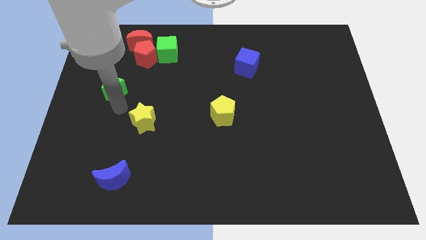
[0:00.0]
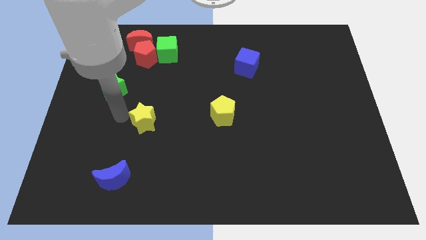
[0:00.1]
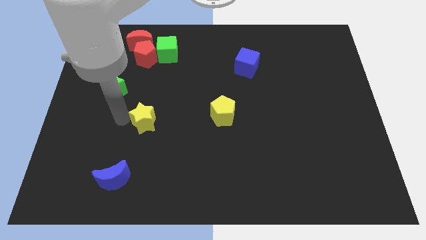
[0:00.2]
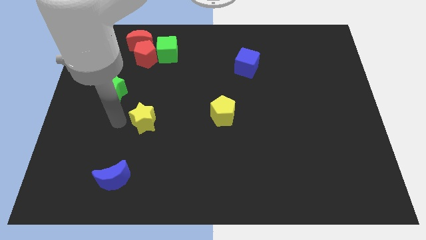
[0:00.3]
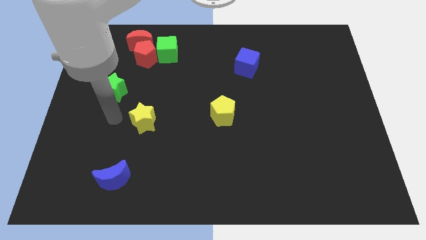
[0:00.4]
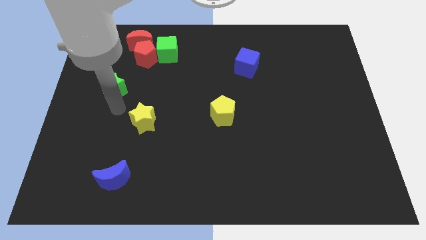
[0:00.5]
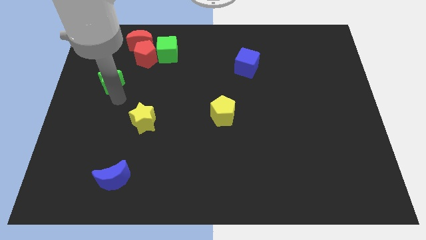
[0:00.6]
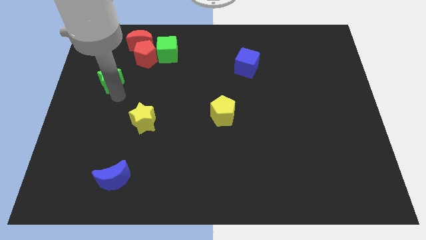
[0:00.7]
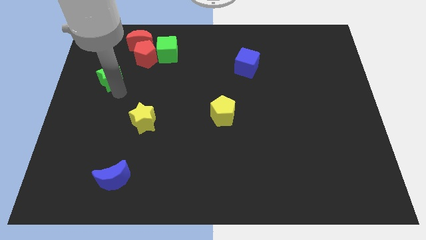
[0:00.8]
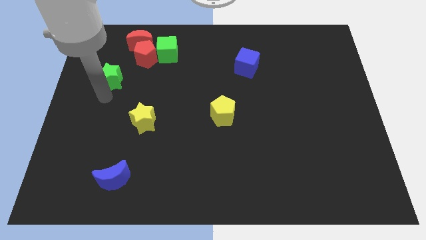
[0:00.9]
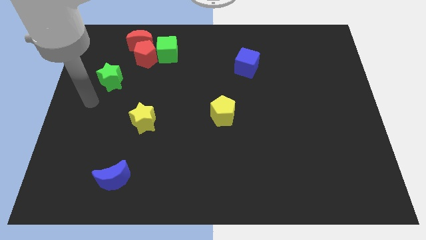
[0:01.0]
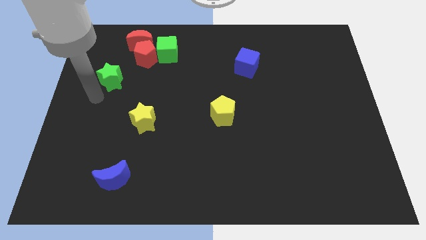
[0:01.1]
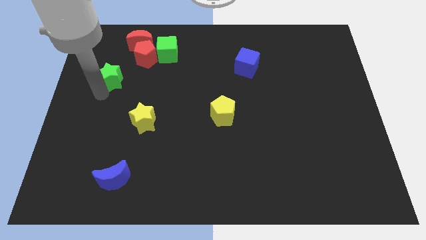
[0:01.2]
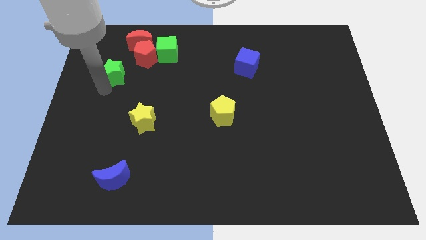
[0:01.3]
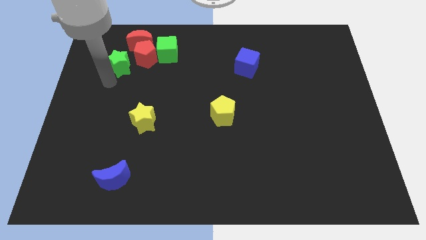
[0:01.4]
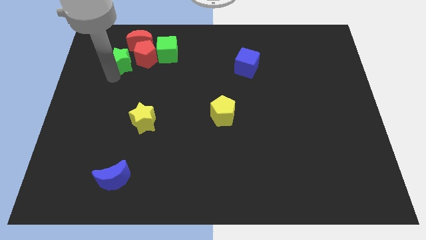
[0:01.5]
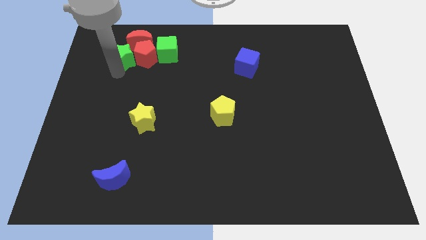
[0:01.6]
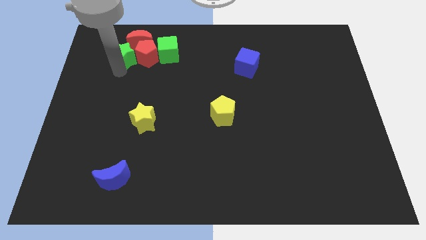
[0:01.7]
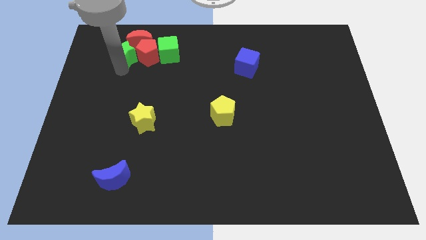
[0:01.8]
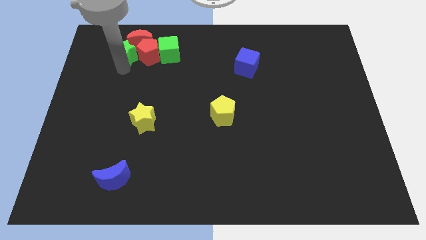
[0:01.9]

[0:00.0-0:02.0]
push the green star left to the red pentagon

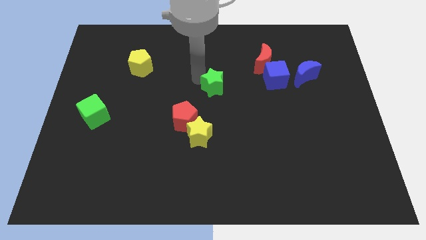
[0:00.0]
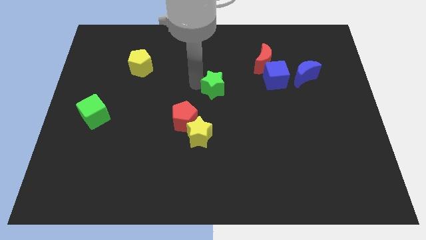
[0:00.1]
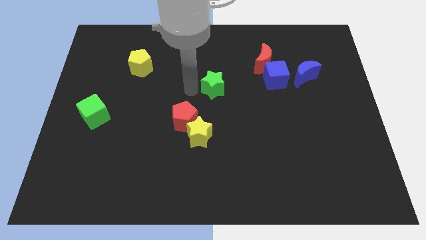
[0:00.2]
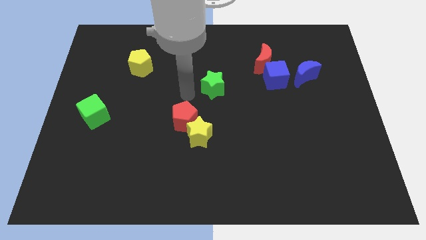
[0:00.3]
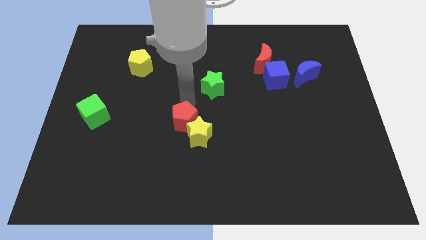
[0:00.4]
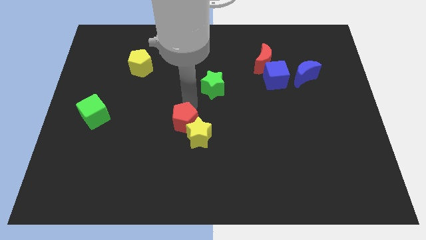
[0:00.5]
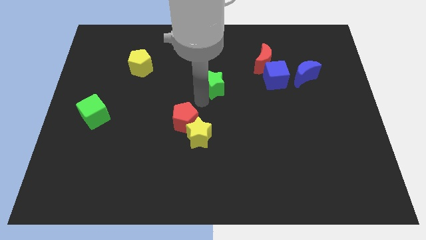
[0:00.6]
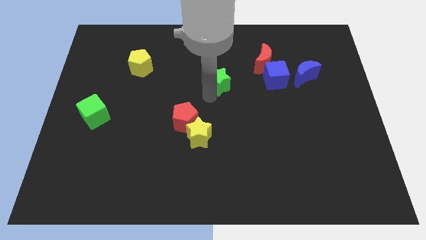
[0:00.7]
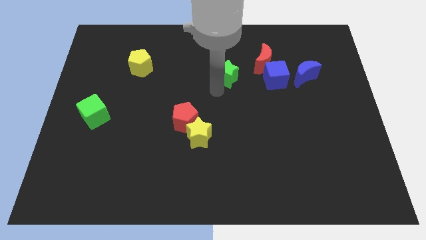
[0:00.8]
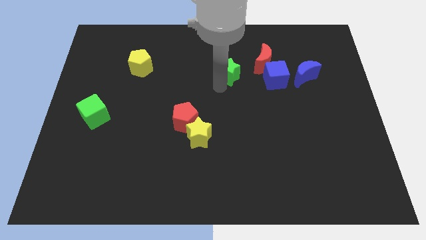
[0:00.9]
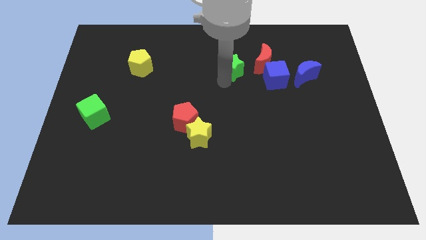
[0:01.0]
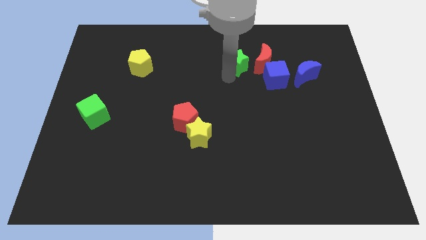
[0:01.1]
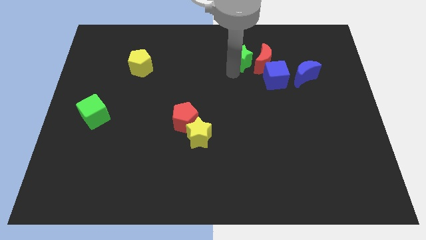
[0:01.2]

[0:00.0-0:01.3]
place the green star diagonally top right to red pentagon

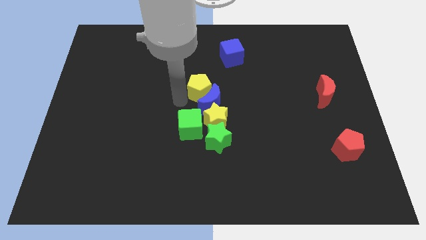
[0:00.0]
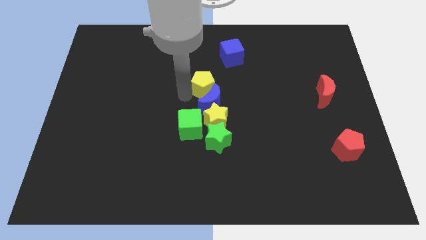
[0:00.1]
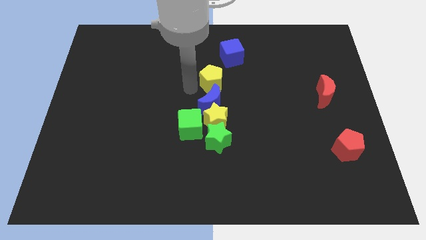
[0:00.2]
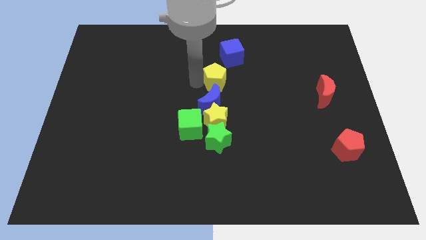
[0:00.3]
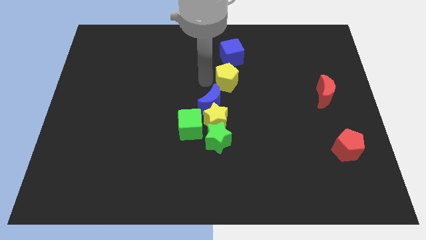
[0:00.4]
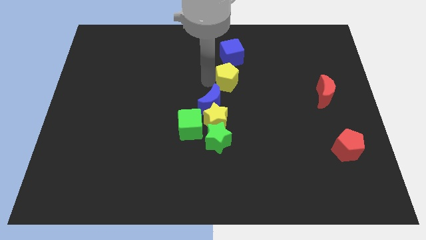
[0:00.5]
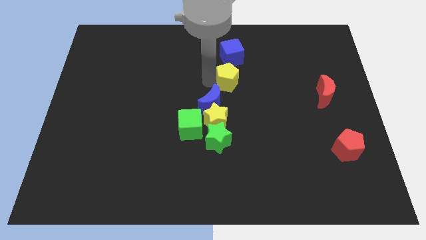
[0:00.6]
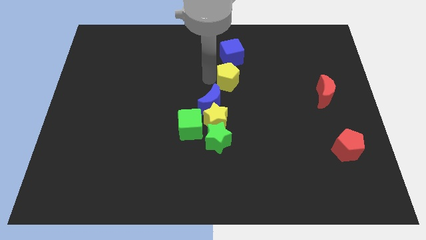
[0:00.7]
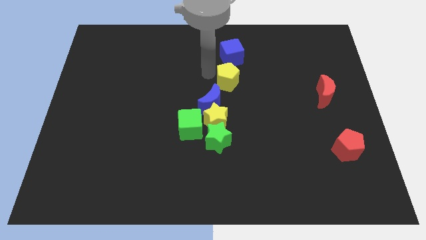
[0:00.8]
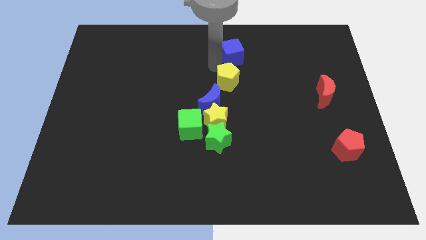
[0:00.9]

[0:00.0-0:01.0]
put the yellow pentagon between the blue cube and blue moon

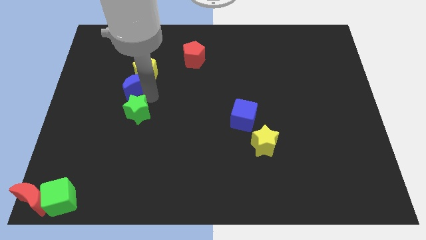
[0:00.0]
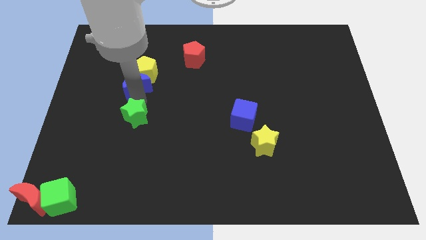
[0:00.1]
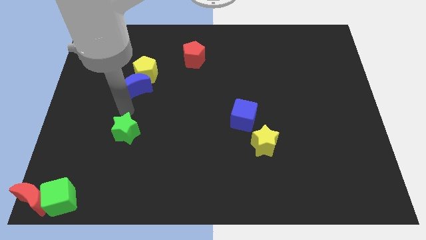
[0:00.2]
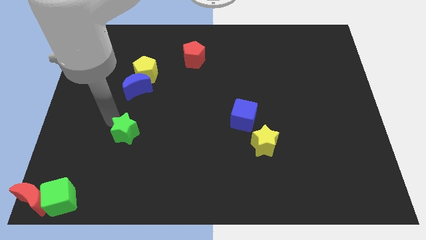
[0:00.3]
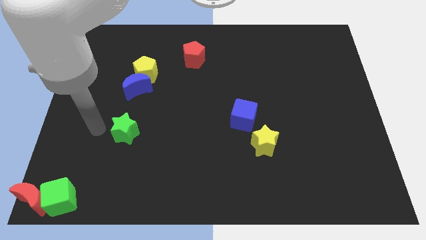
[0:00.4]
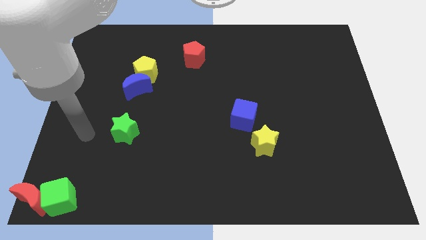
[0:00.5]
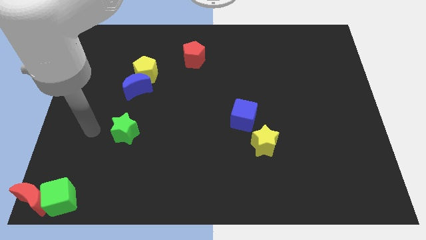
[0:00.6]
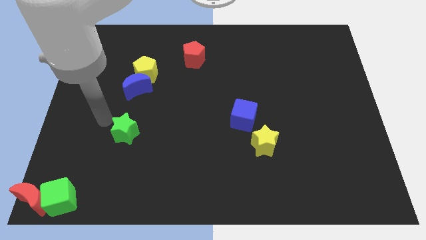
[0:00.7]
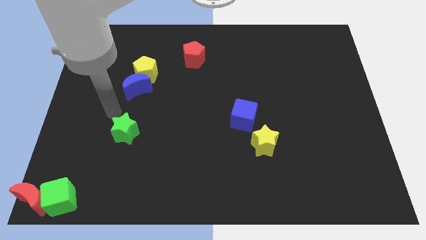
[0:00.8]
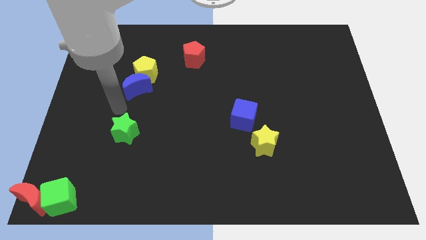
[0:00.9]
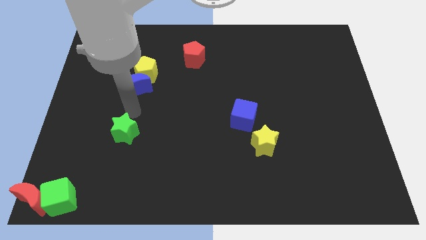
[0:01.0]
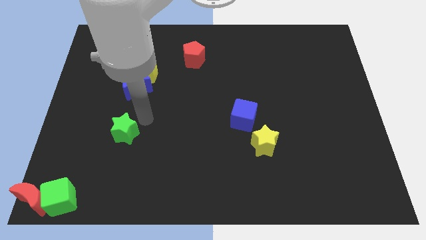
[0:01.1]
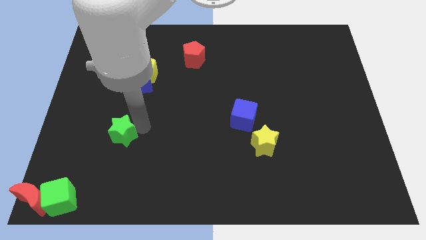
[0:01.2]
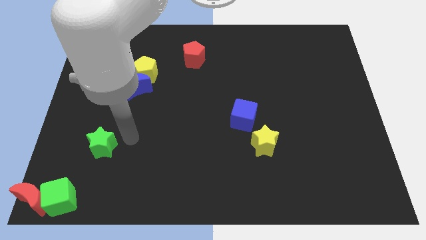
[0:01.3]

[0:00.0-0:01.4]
separate the green star from the blue moon

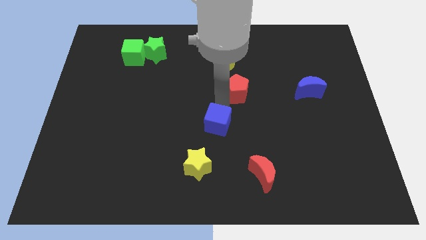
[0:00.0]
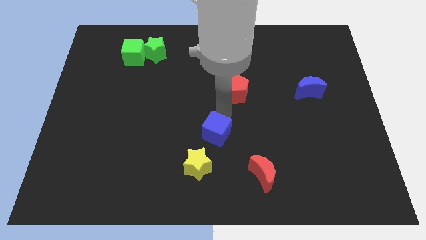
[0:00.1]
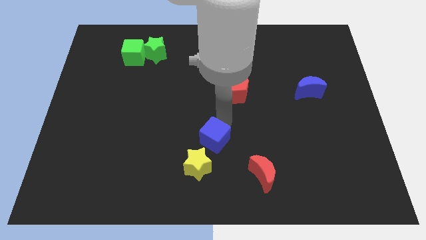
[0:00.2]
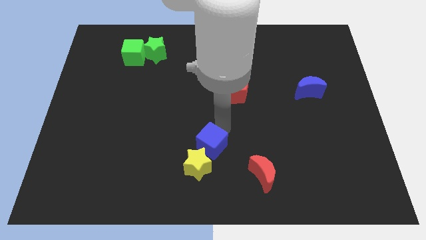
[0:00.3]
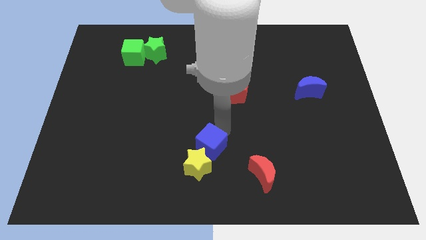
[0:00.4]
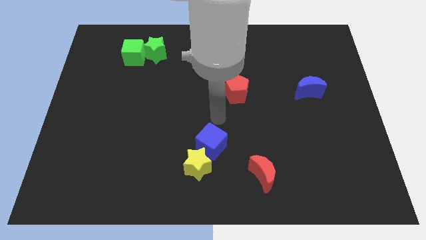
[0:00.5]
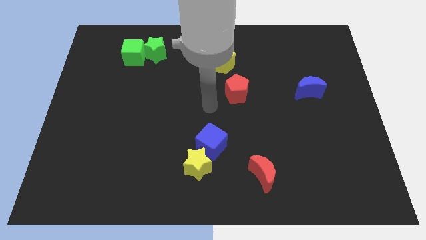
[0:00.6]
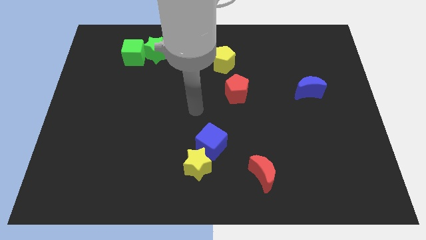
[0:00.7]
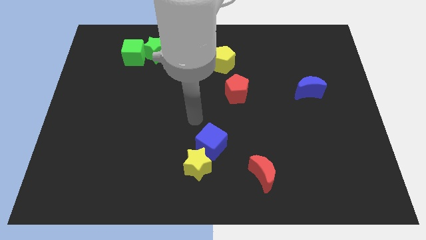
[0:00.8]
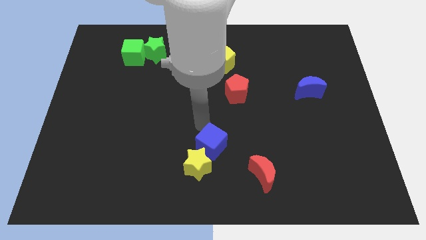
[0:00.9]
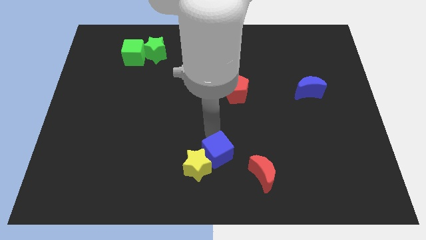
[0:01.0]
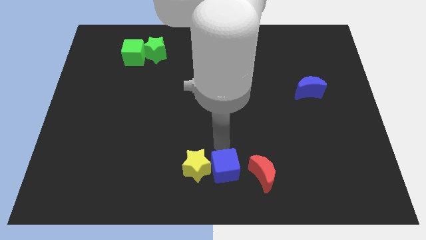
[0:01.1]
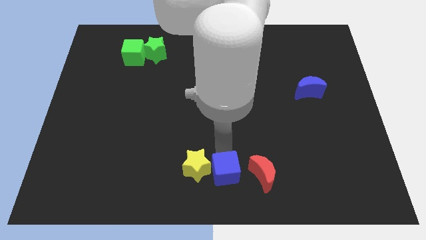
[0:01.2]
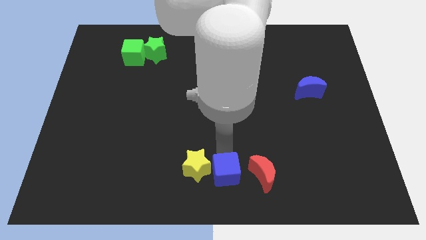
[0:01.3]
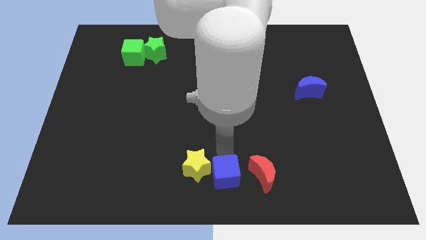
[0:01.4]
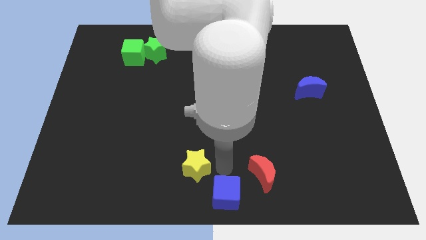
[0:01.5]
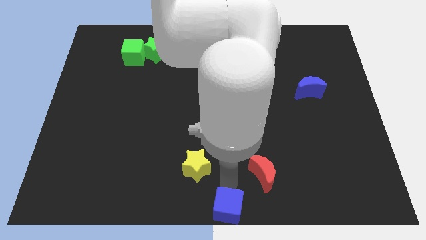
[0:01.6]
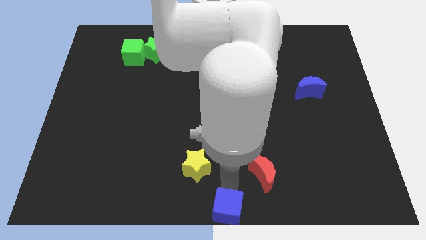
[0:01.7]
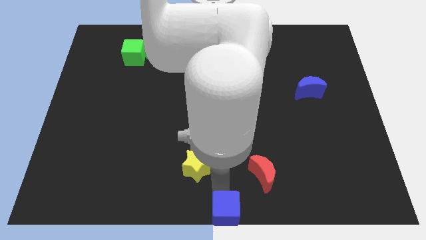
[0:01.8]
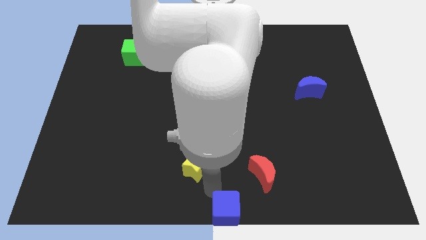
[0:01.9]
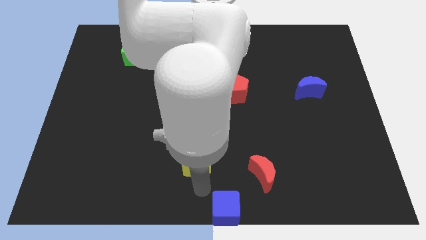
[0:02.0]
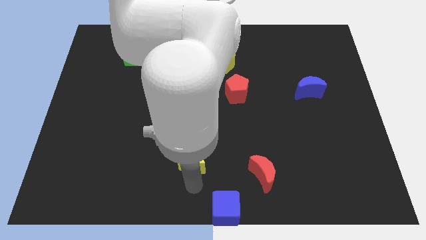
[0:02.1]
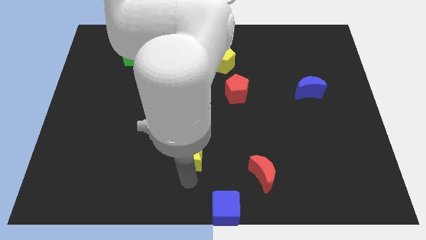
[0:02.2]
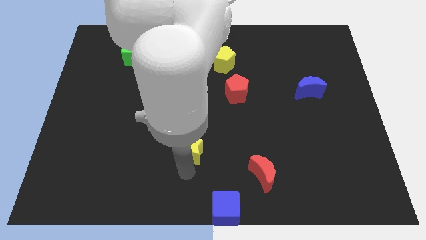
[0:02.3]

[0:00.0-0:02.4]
place blue cube to the bottom center

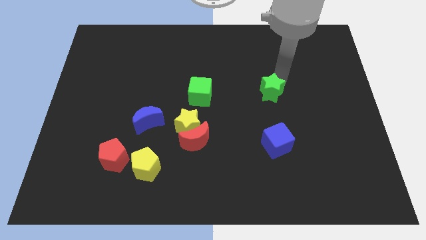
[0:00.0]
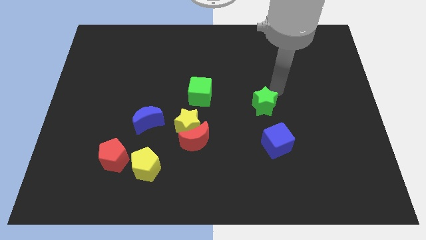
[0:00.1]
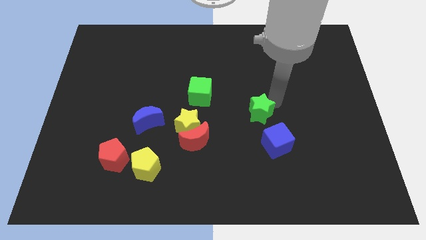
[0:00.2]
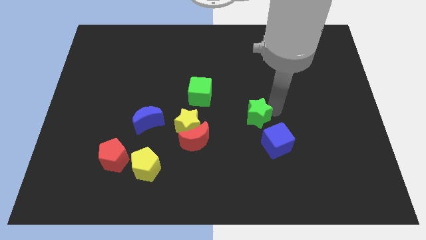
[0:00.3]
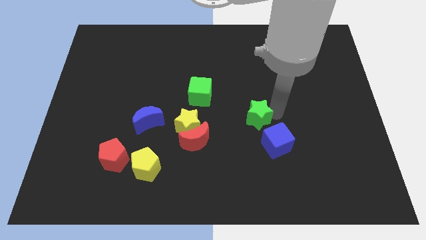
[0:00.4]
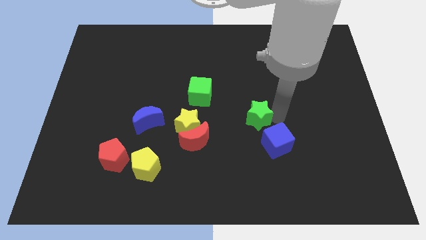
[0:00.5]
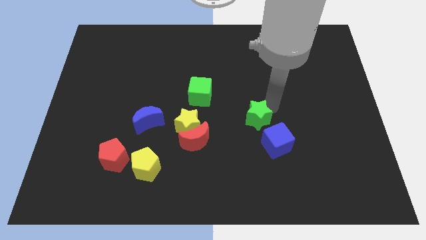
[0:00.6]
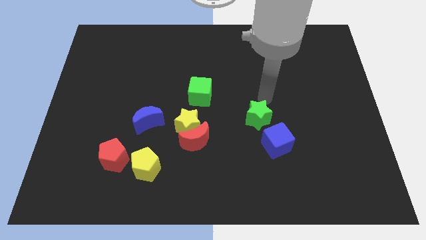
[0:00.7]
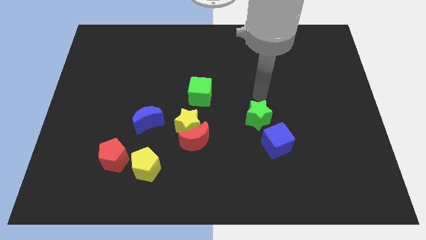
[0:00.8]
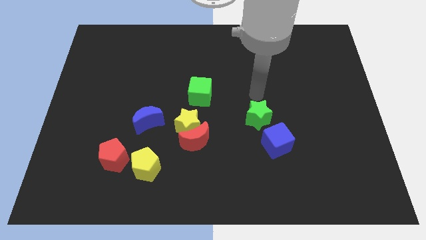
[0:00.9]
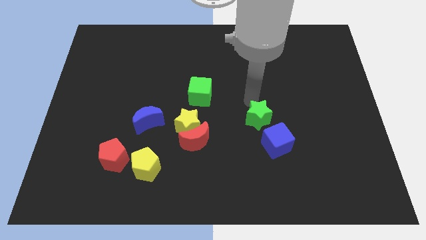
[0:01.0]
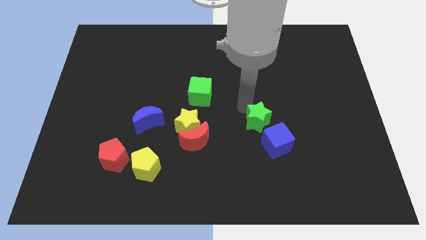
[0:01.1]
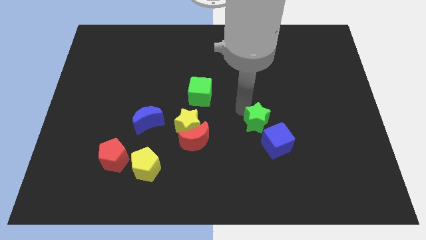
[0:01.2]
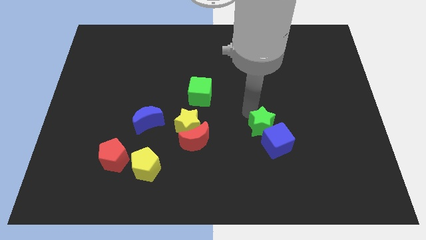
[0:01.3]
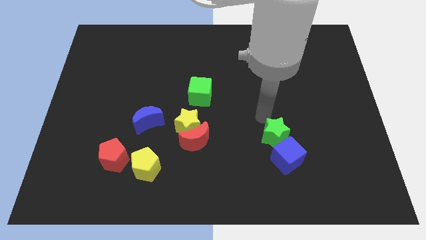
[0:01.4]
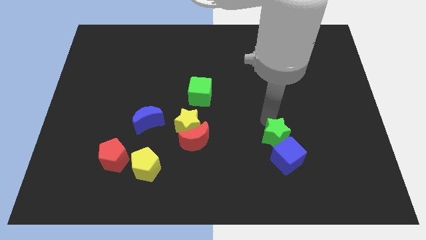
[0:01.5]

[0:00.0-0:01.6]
push the green star into the blue cube
